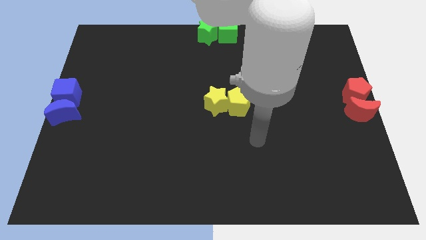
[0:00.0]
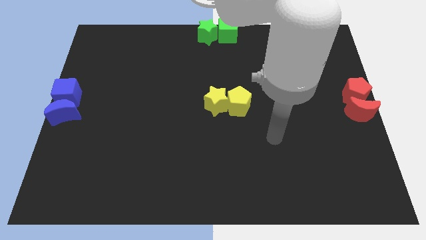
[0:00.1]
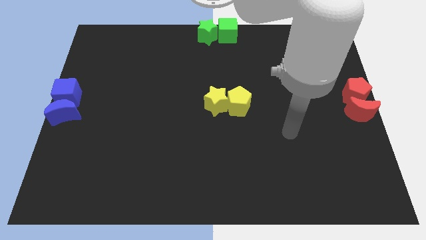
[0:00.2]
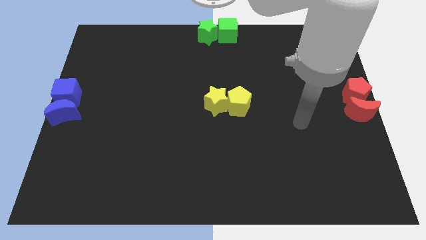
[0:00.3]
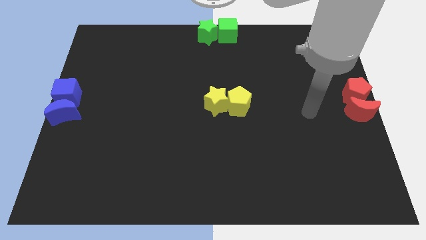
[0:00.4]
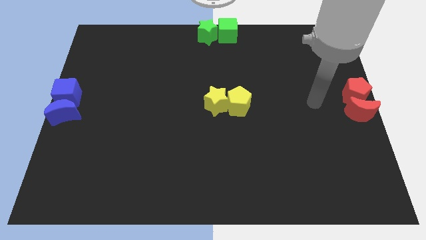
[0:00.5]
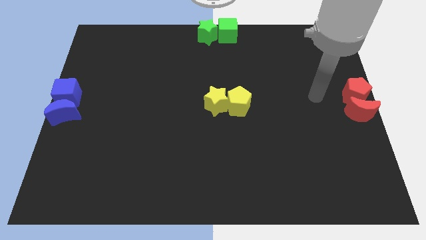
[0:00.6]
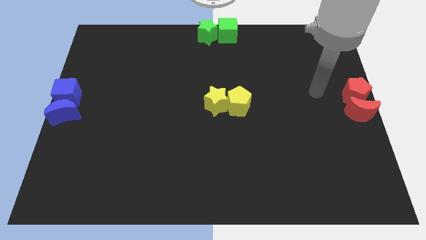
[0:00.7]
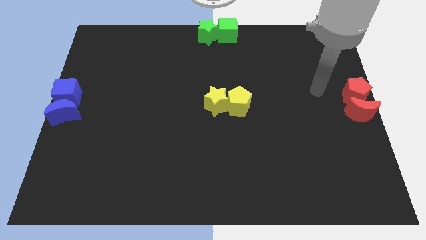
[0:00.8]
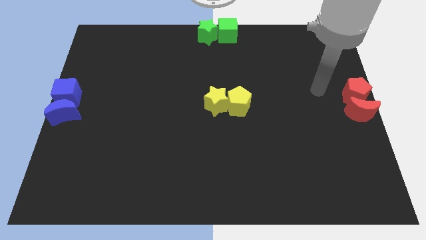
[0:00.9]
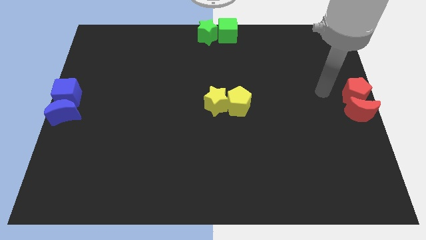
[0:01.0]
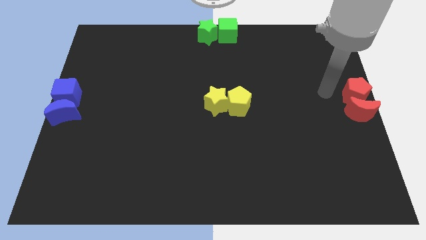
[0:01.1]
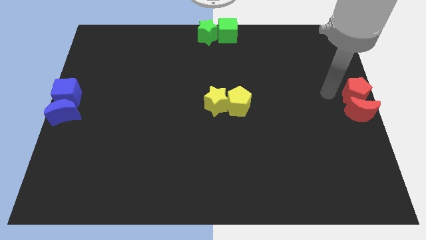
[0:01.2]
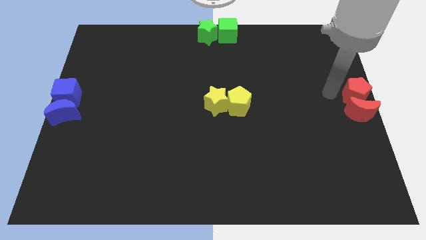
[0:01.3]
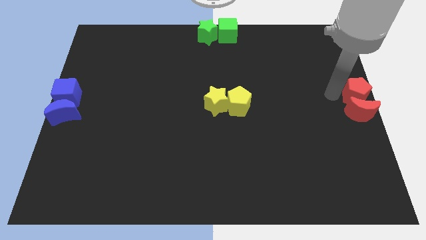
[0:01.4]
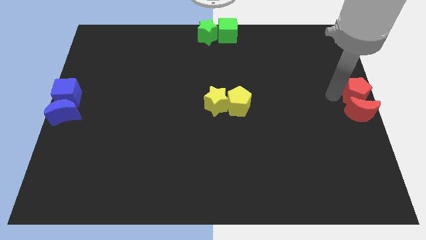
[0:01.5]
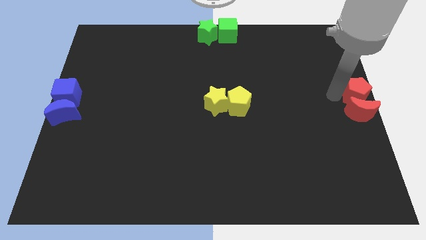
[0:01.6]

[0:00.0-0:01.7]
slightly move red pentagon near to red crescent

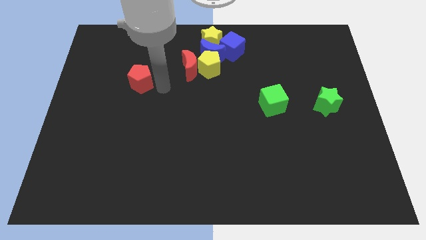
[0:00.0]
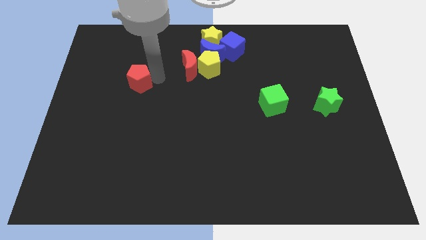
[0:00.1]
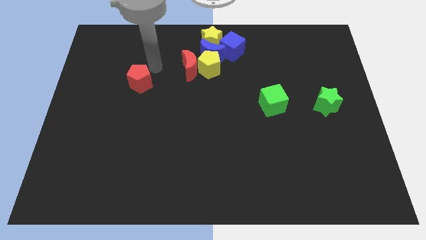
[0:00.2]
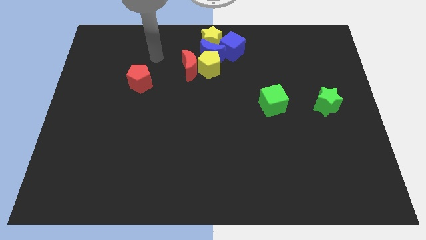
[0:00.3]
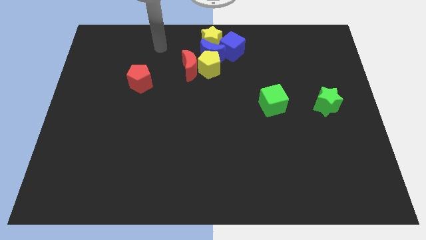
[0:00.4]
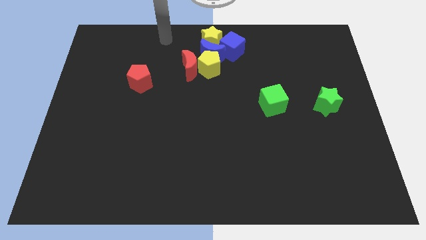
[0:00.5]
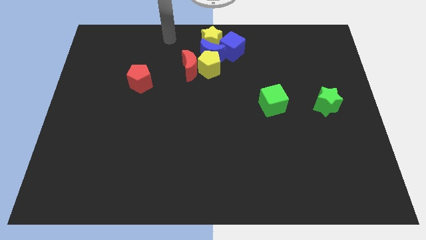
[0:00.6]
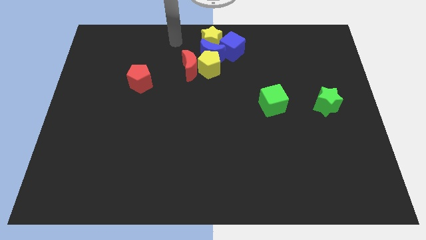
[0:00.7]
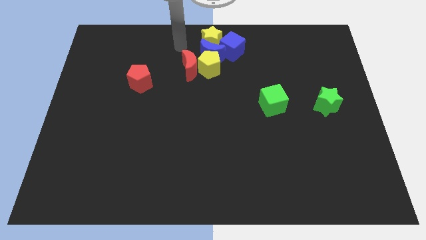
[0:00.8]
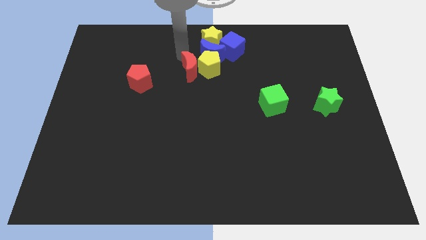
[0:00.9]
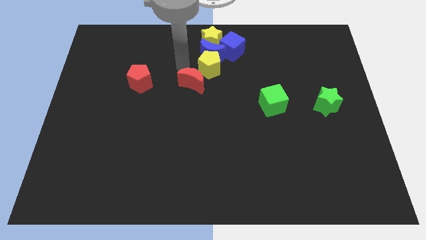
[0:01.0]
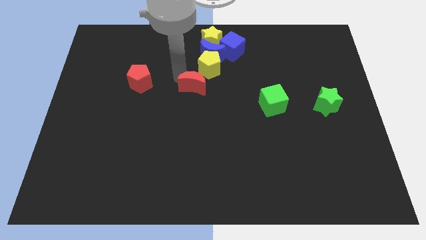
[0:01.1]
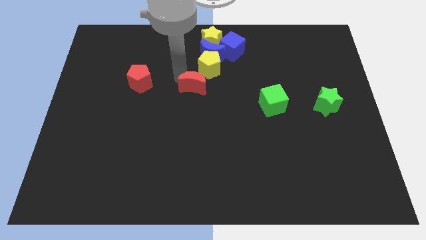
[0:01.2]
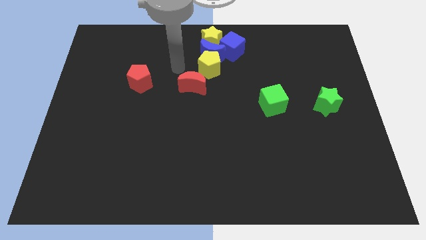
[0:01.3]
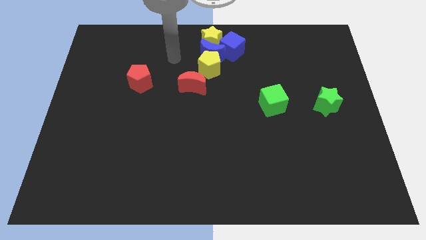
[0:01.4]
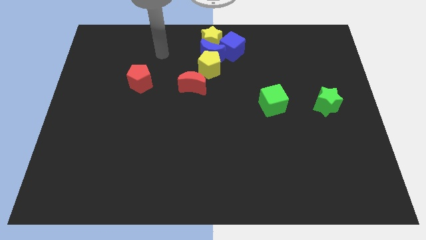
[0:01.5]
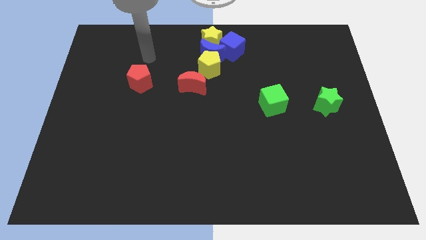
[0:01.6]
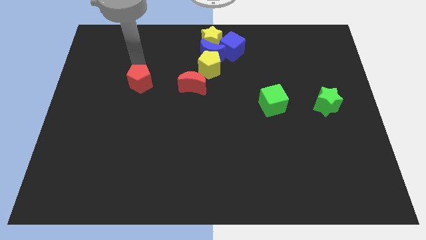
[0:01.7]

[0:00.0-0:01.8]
push the red crescent slightly to the bottom

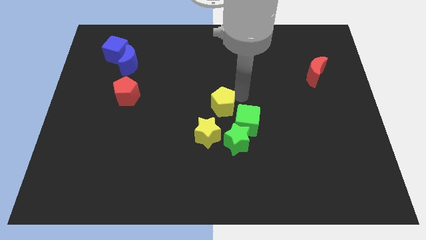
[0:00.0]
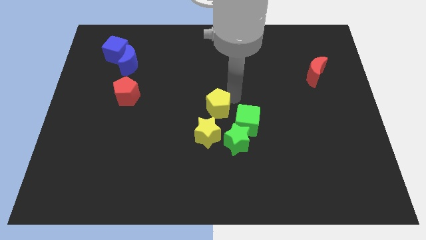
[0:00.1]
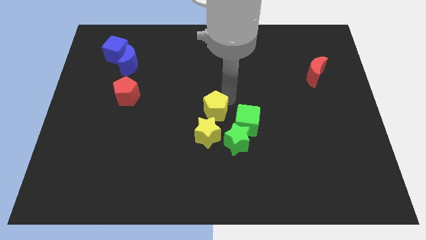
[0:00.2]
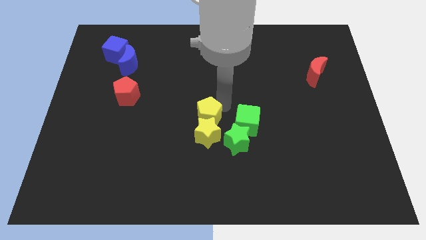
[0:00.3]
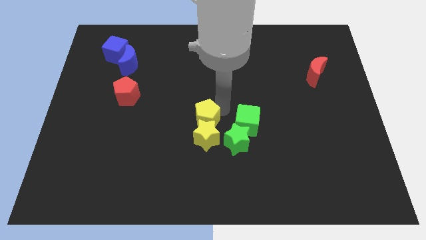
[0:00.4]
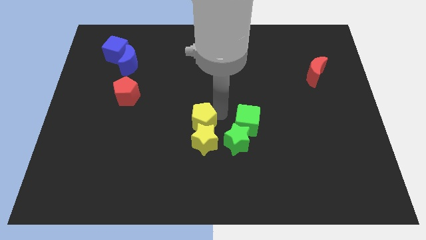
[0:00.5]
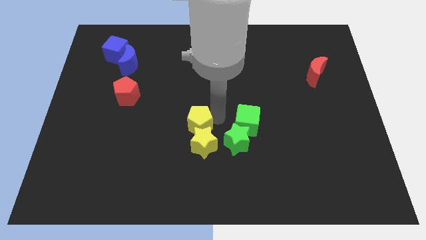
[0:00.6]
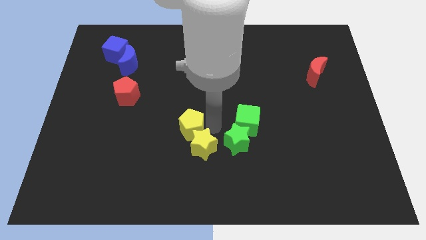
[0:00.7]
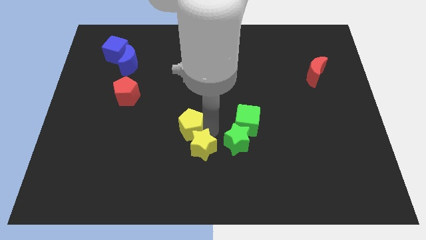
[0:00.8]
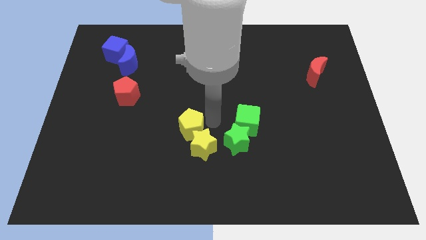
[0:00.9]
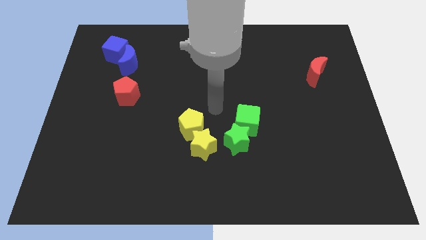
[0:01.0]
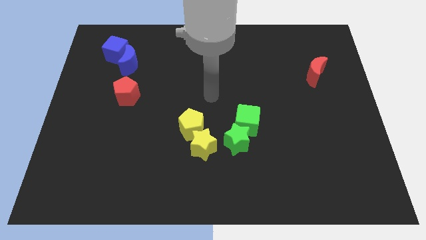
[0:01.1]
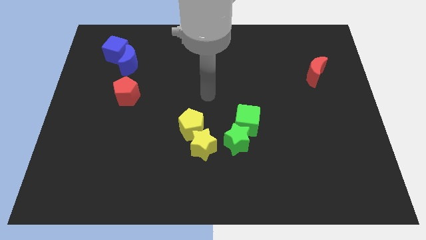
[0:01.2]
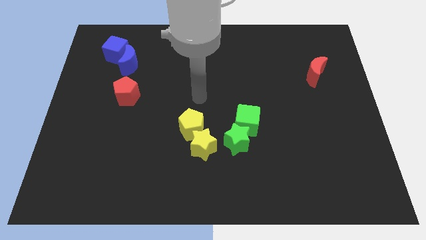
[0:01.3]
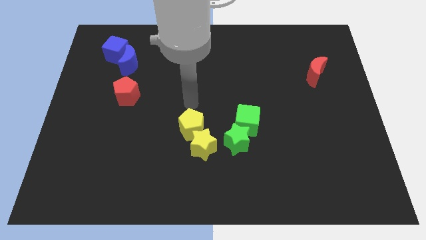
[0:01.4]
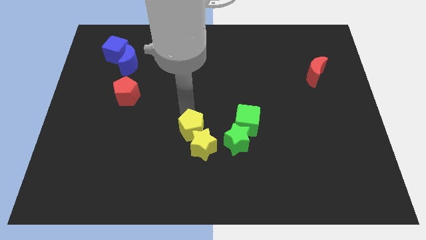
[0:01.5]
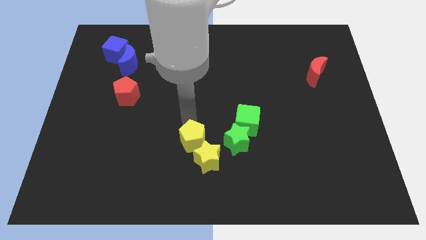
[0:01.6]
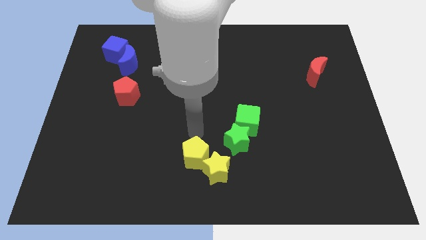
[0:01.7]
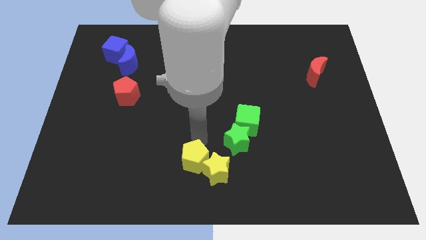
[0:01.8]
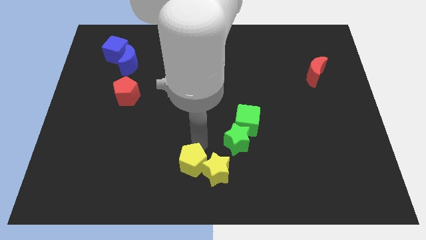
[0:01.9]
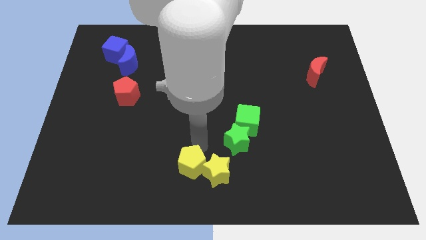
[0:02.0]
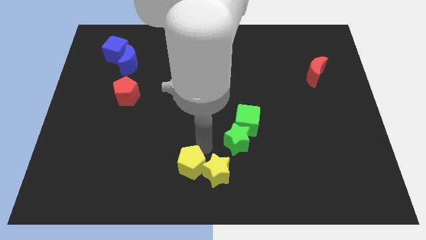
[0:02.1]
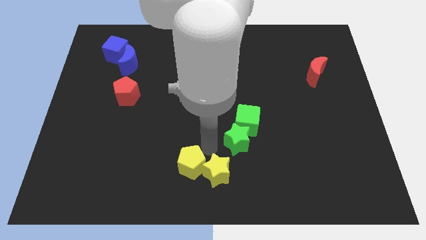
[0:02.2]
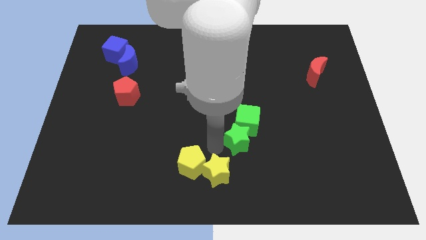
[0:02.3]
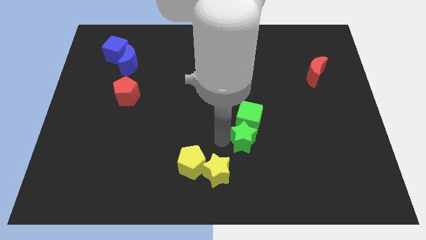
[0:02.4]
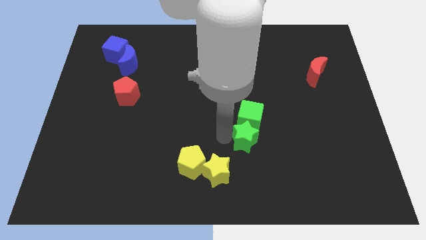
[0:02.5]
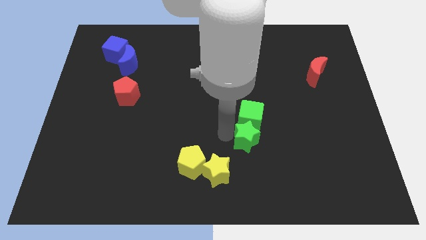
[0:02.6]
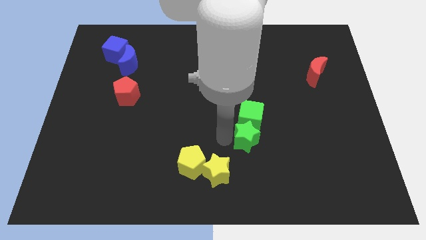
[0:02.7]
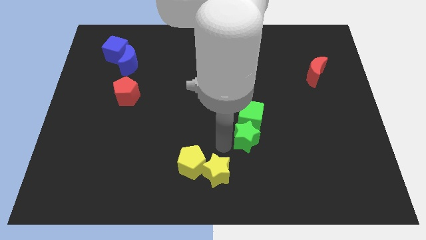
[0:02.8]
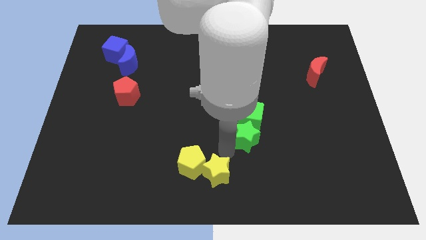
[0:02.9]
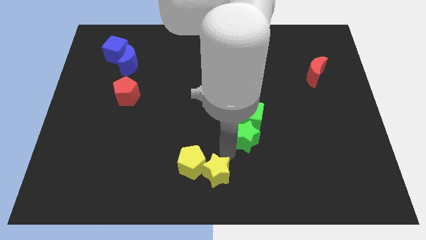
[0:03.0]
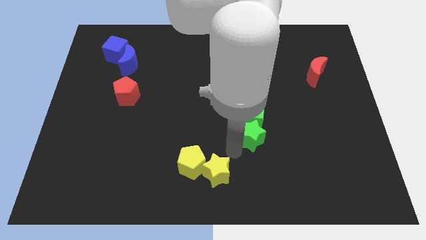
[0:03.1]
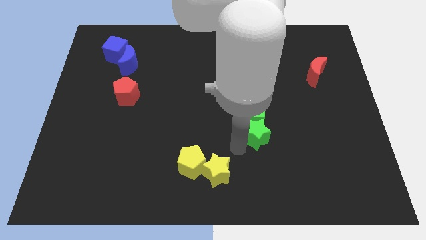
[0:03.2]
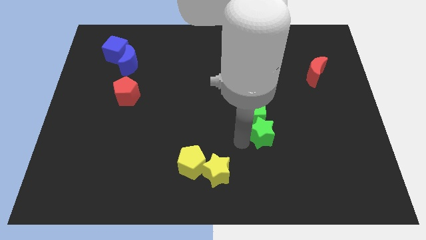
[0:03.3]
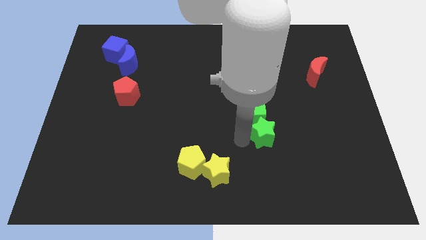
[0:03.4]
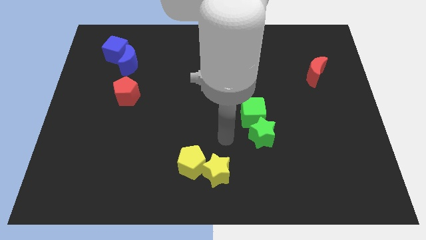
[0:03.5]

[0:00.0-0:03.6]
move the yellow and green blocks in opposite directions

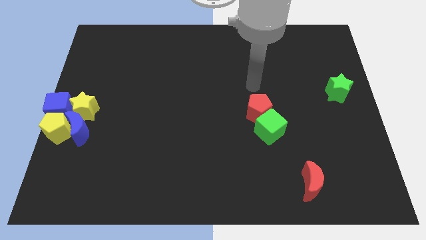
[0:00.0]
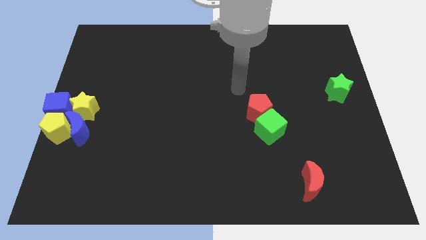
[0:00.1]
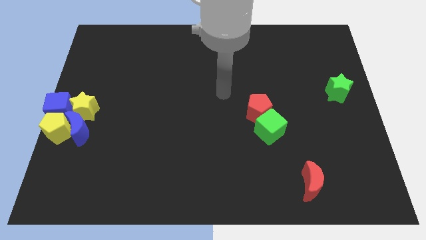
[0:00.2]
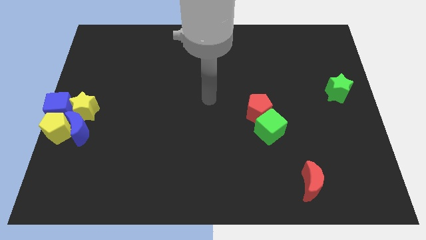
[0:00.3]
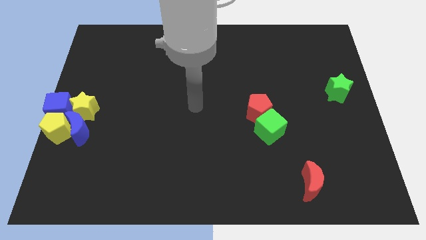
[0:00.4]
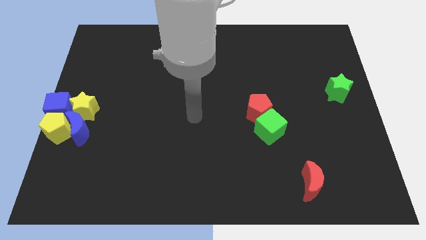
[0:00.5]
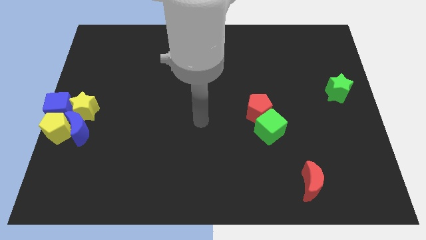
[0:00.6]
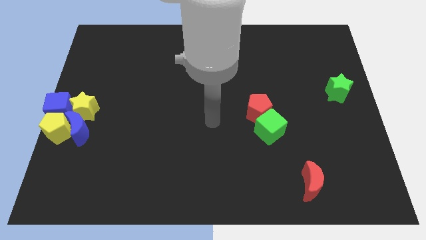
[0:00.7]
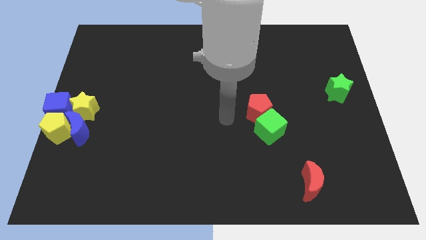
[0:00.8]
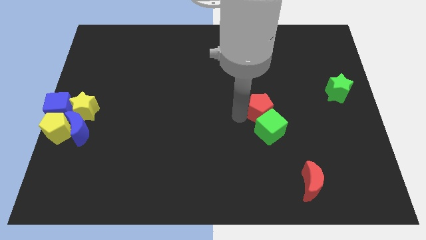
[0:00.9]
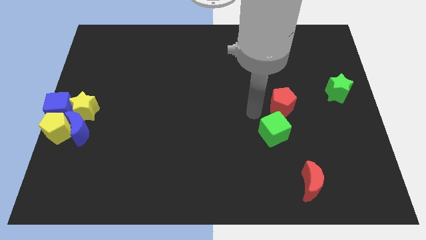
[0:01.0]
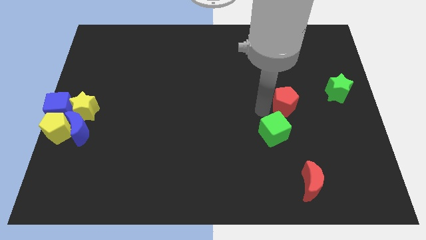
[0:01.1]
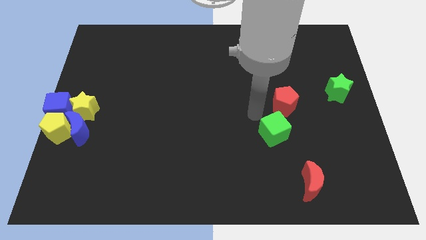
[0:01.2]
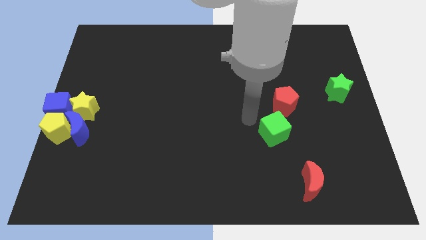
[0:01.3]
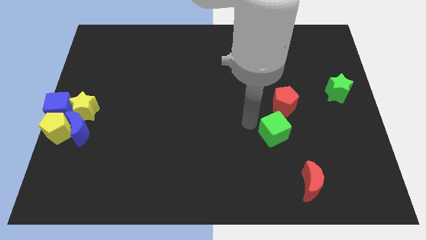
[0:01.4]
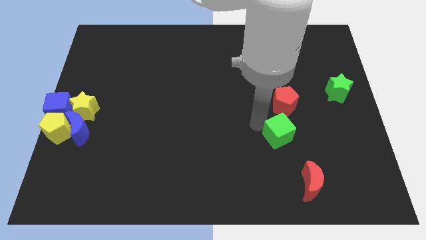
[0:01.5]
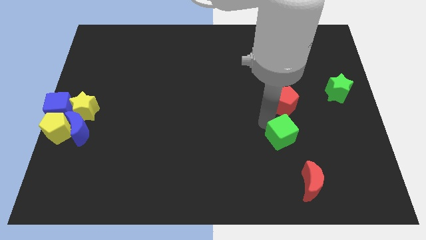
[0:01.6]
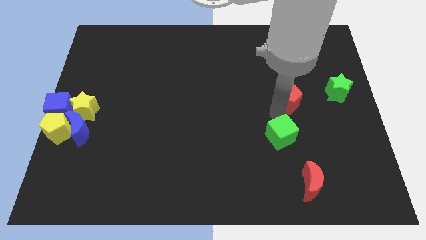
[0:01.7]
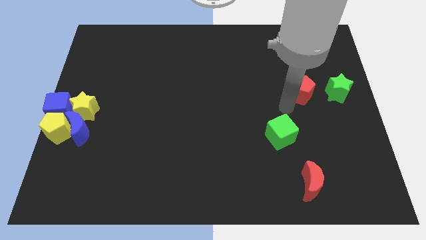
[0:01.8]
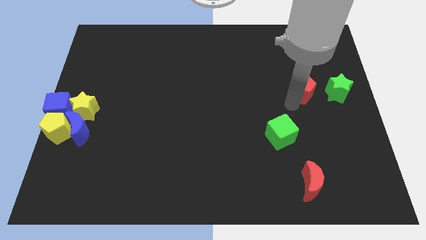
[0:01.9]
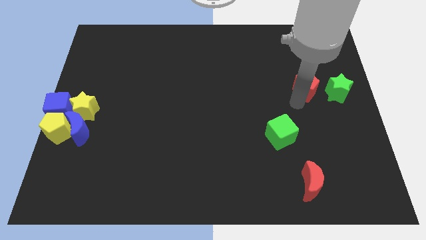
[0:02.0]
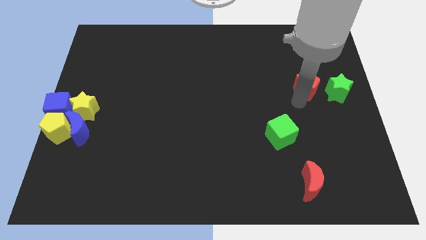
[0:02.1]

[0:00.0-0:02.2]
move the red pentagon to the left side of the green star
